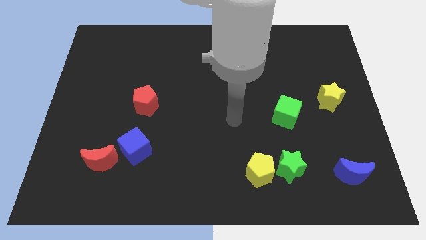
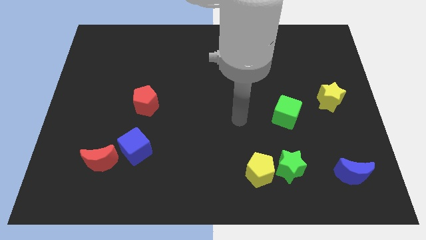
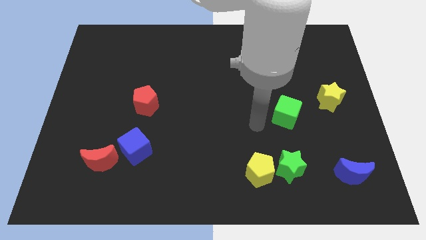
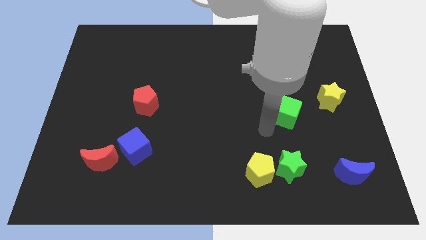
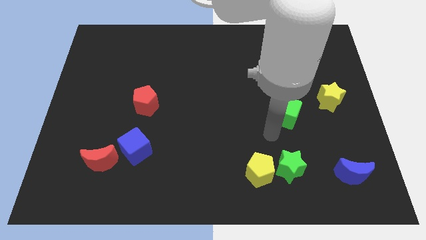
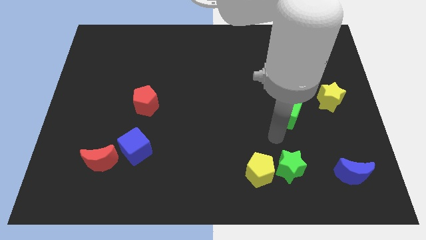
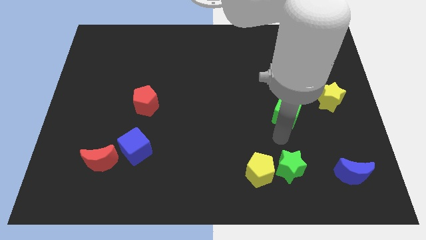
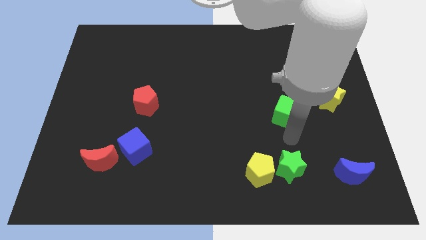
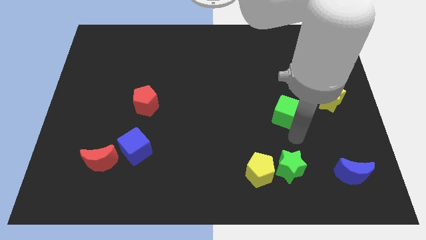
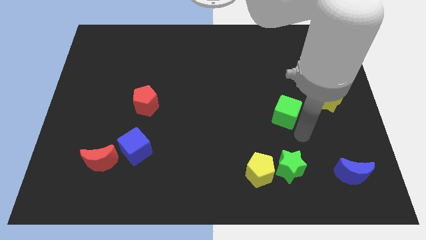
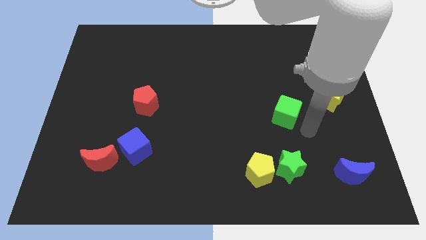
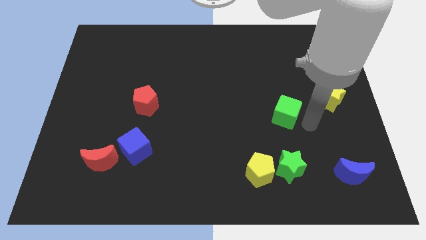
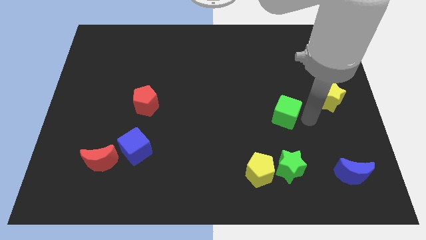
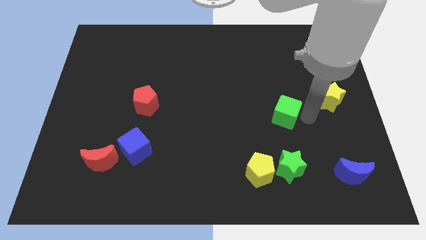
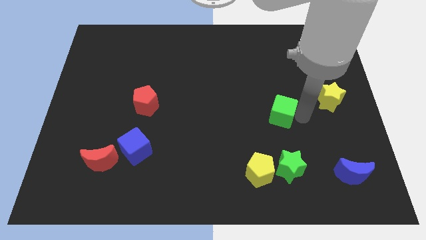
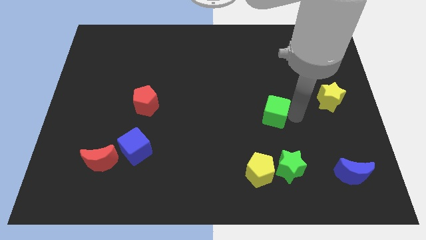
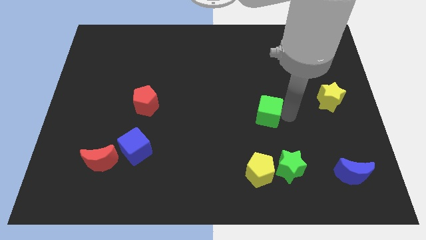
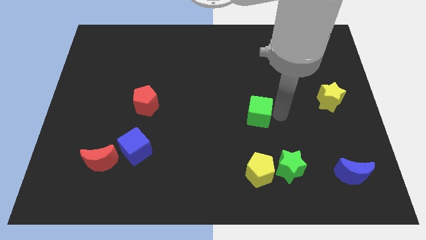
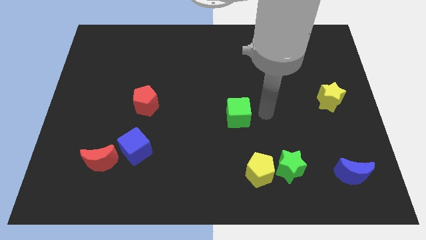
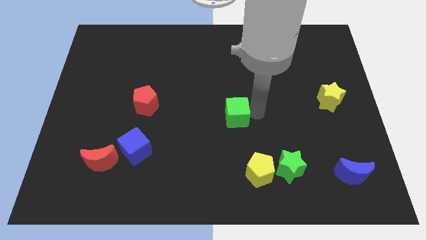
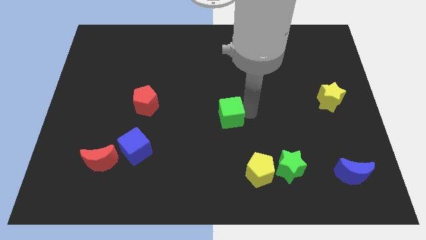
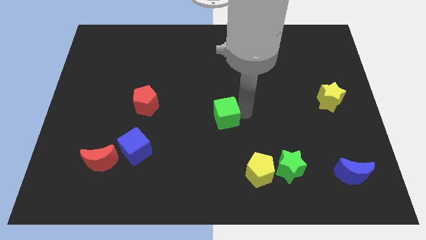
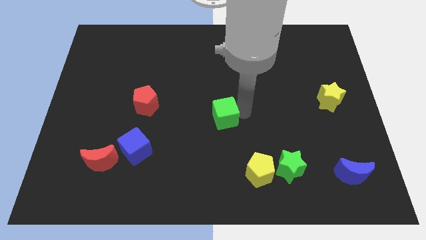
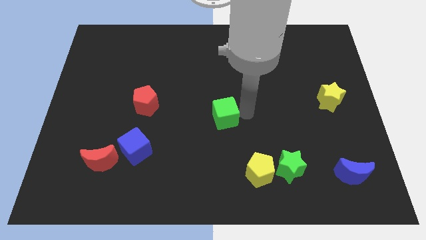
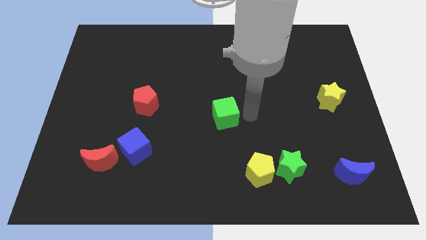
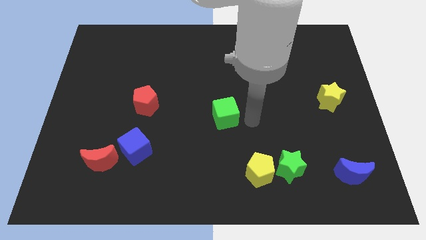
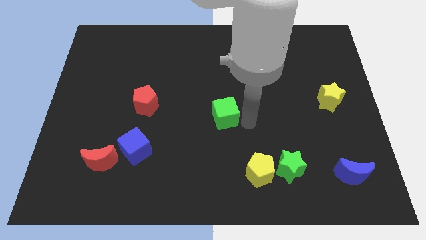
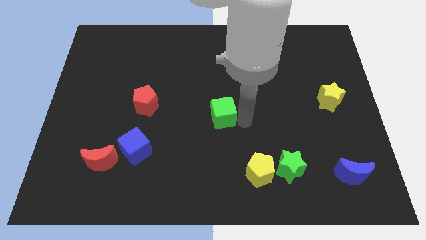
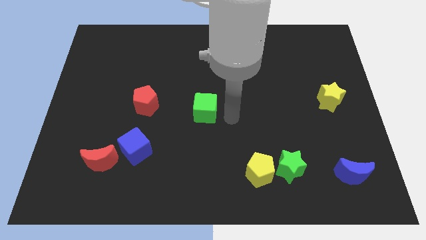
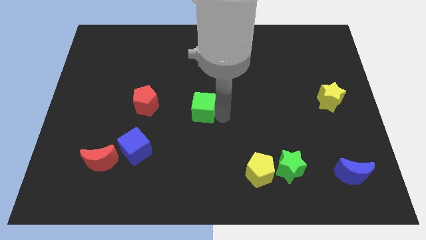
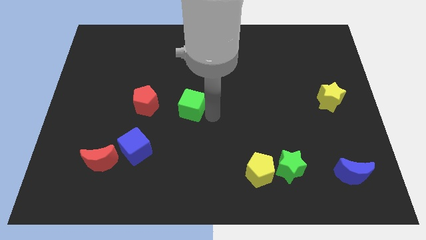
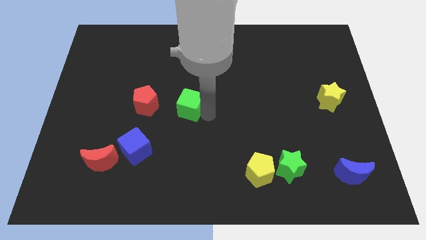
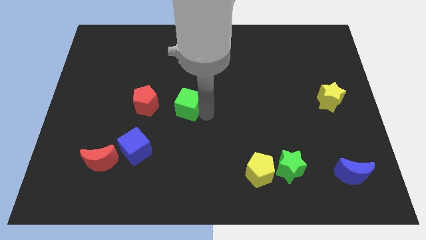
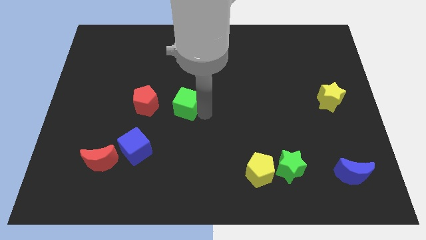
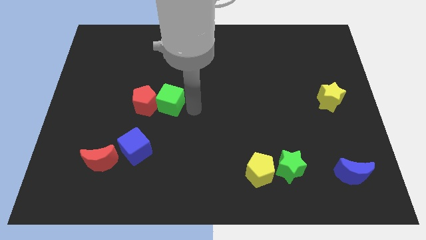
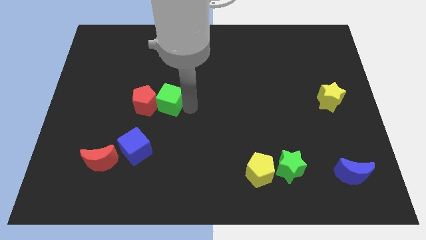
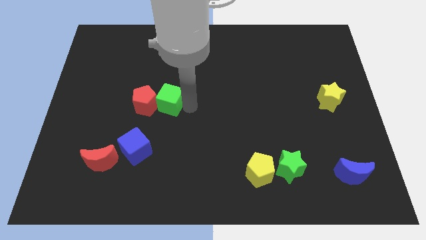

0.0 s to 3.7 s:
slide the green cube close to the red pentagon

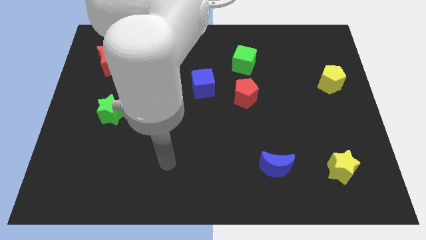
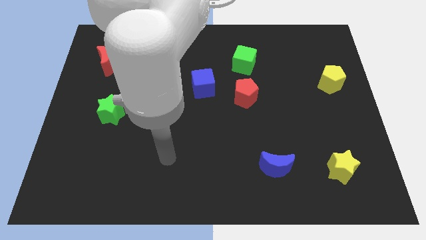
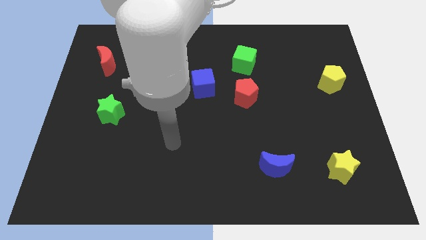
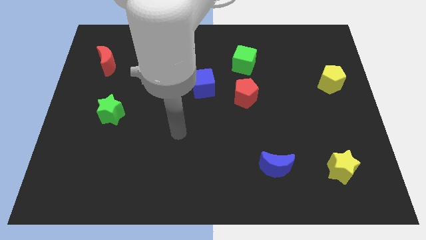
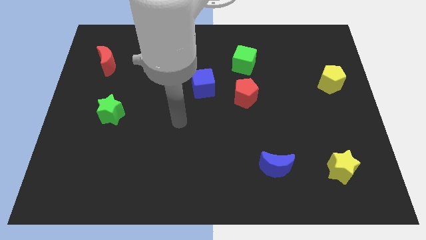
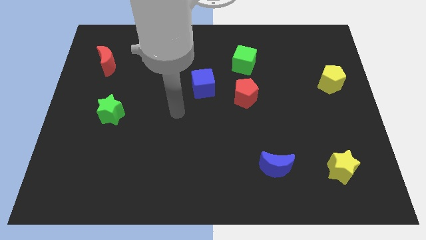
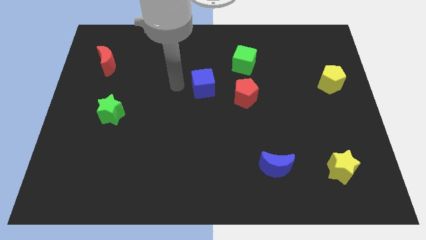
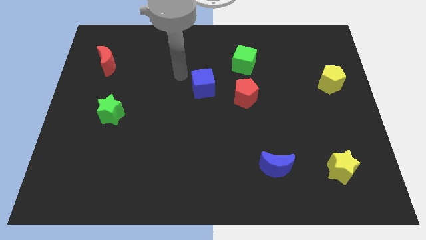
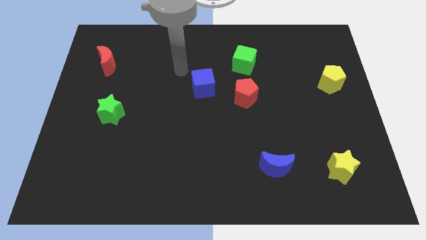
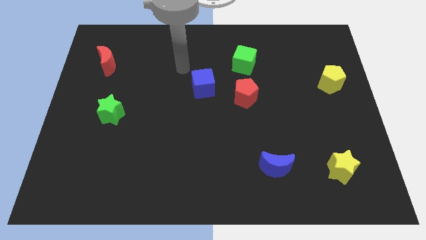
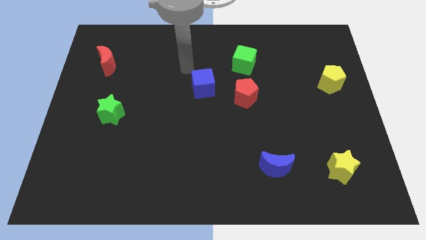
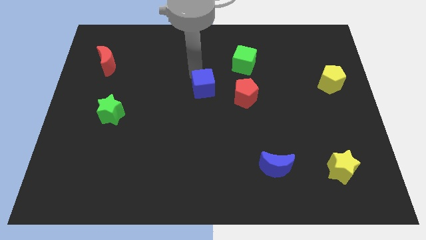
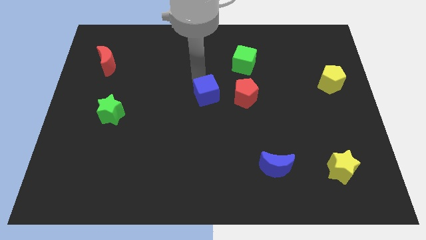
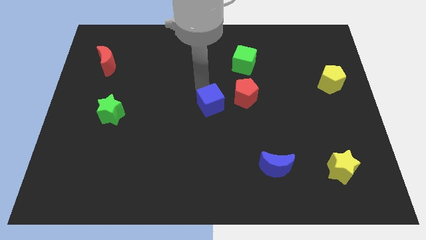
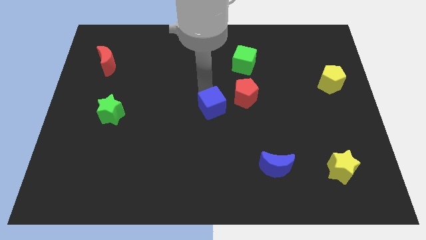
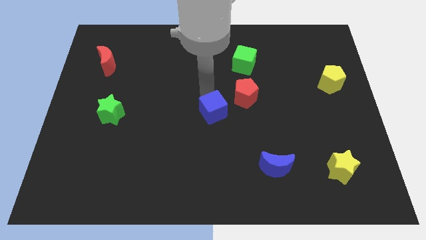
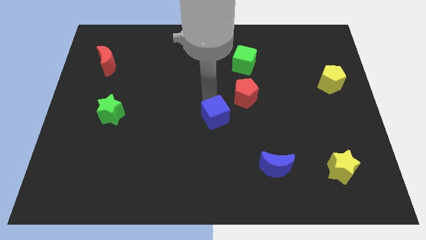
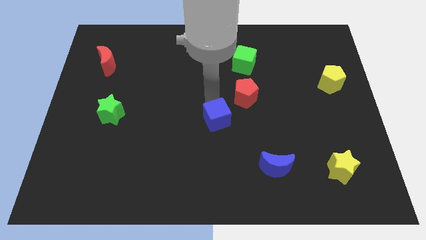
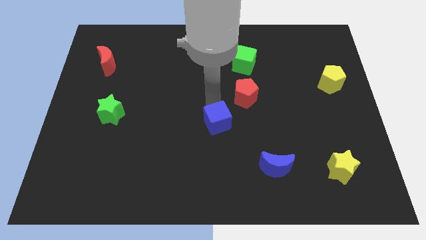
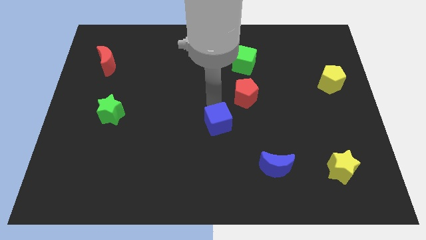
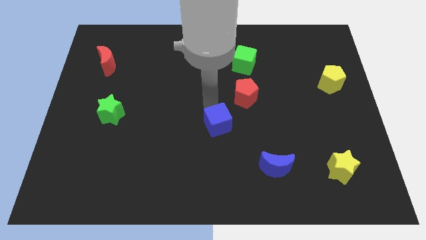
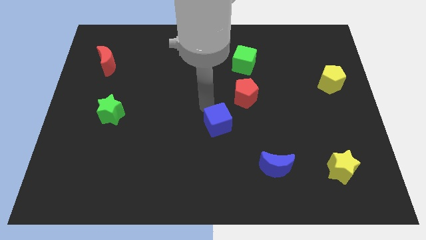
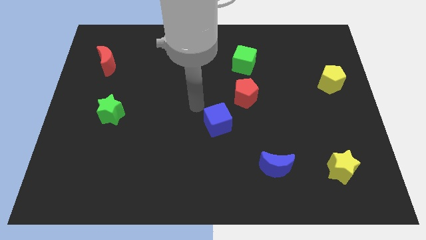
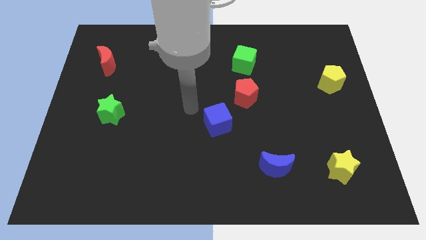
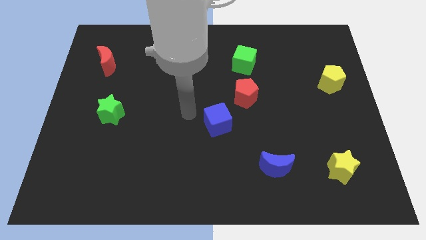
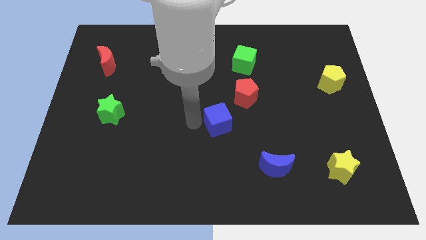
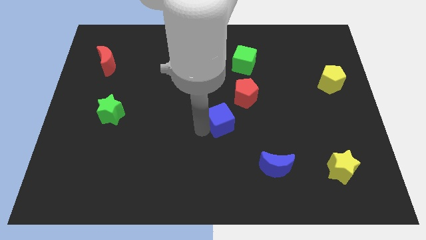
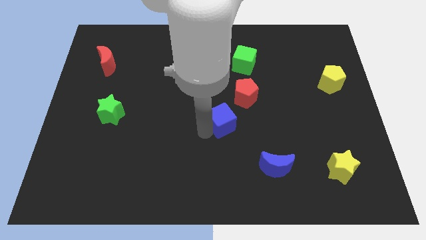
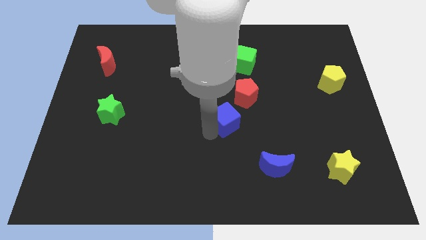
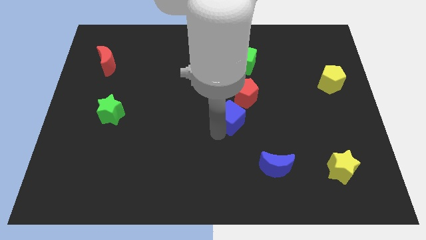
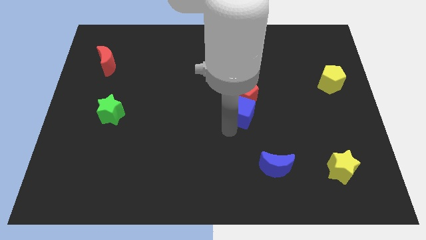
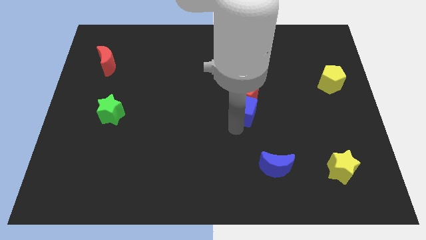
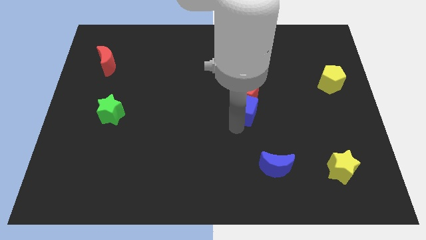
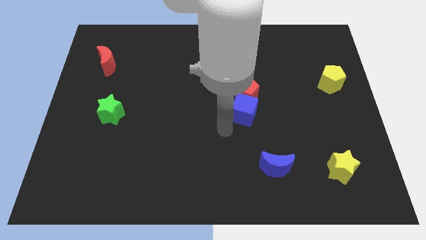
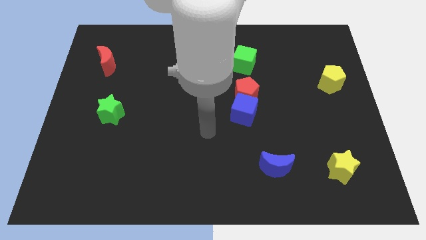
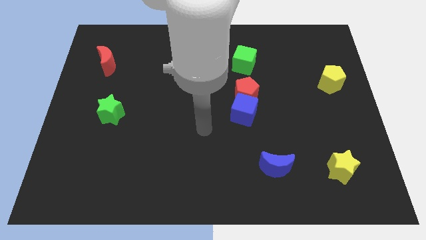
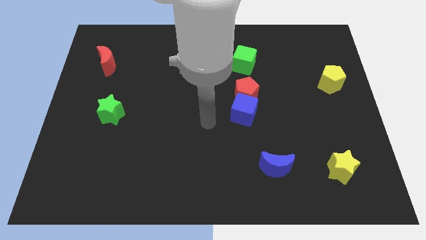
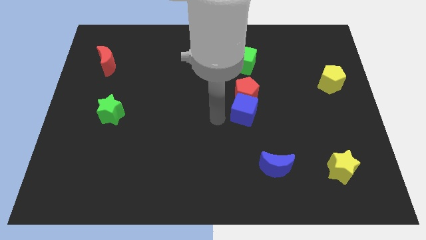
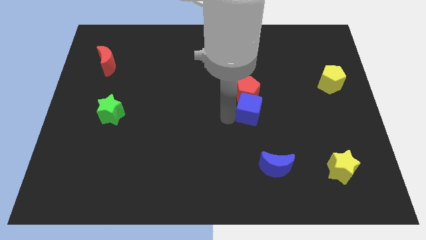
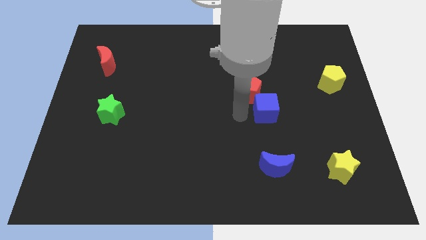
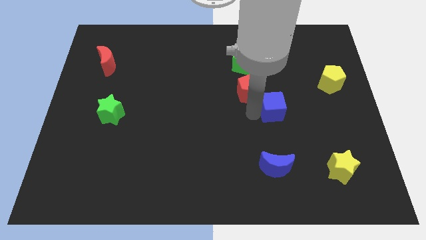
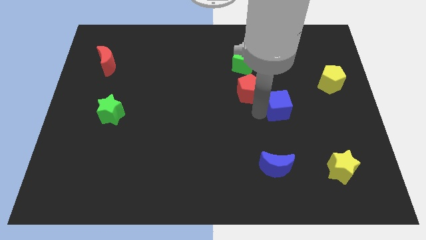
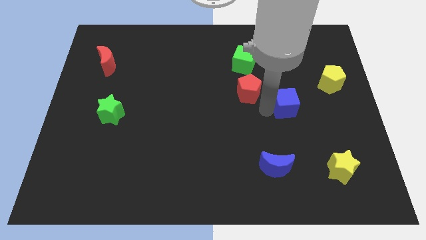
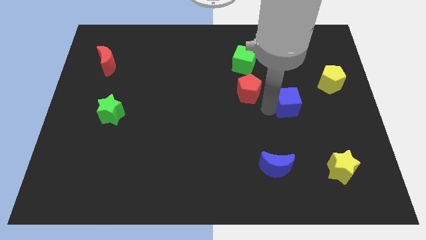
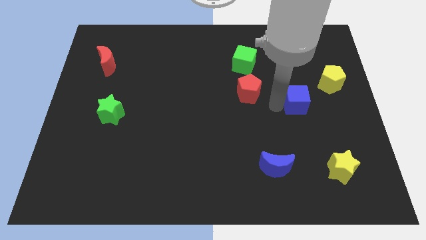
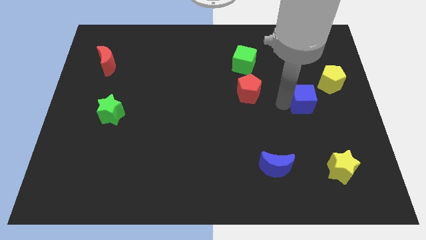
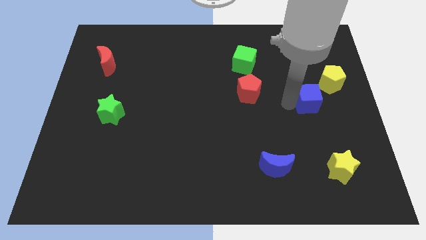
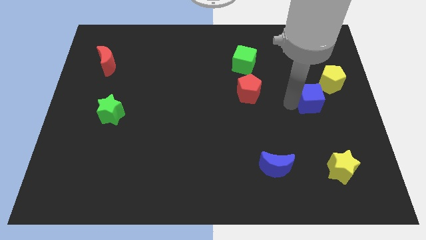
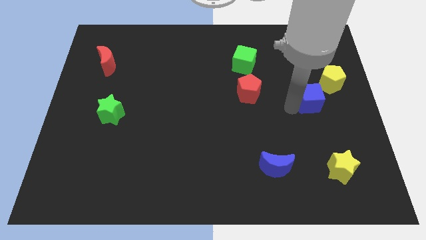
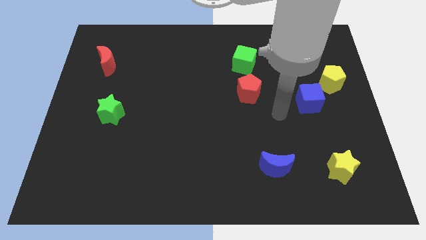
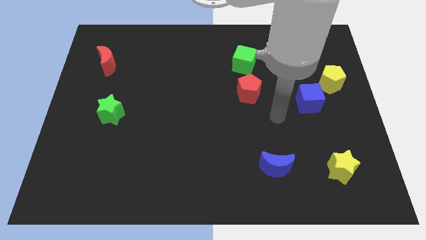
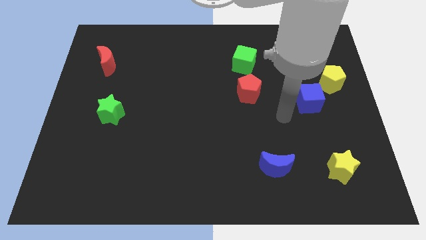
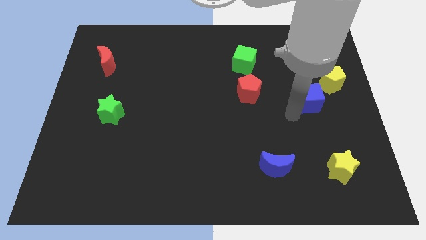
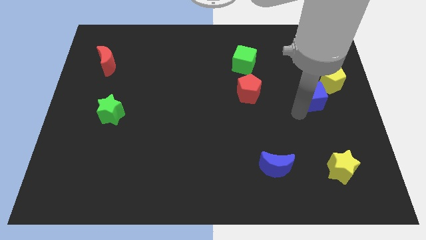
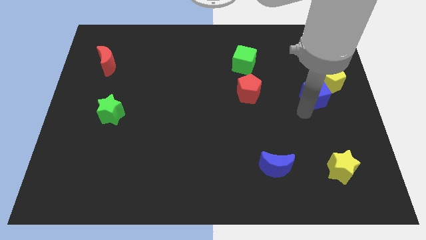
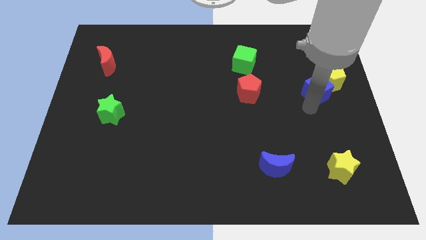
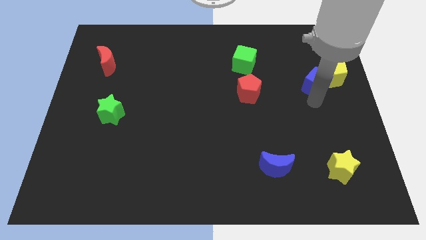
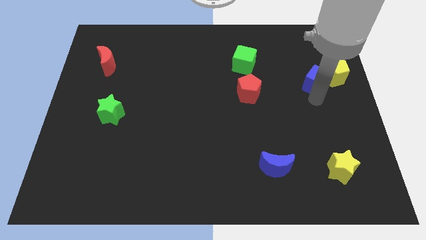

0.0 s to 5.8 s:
put the blue cube close to the yellow pentagon
